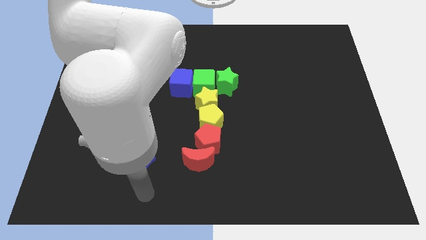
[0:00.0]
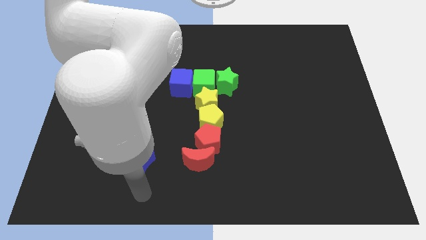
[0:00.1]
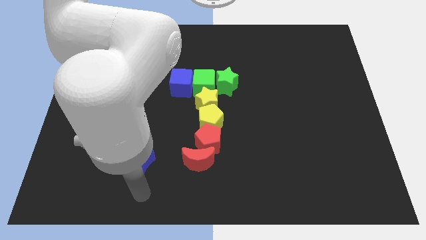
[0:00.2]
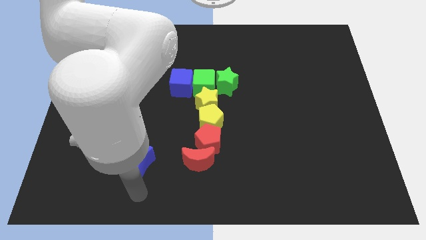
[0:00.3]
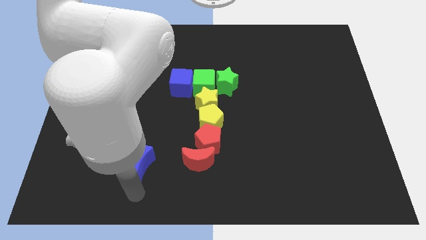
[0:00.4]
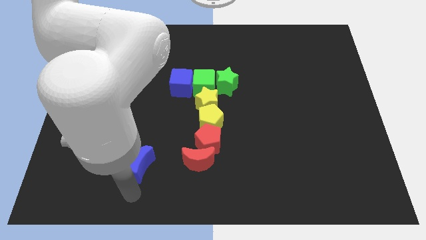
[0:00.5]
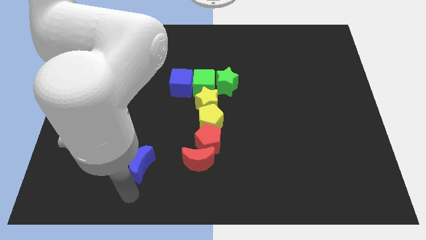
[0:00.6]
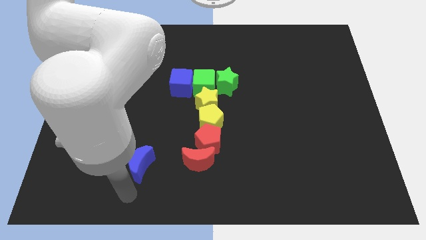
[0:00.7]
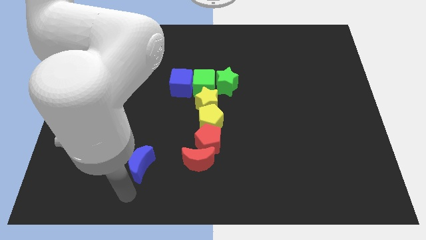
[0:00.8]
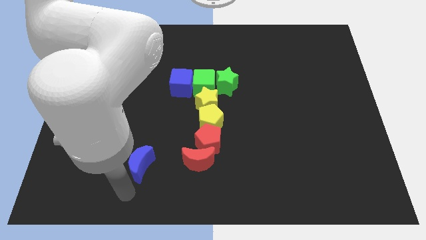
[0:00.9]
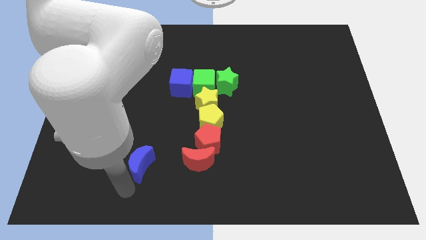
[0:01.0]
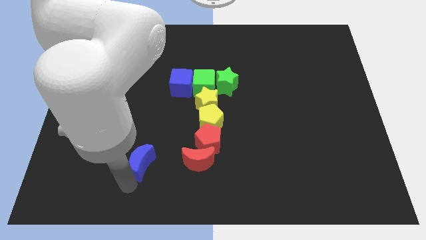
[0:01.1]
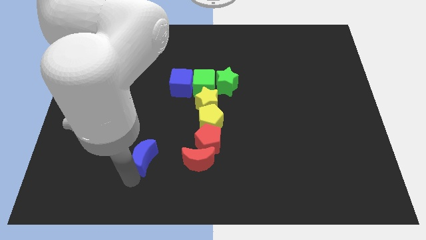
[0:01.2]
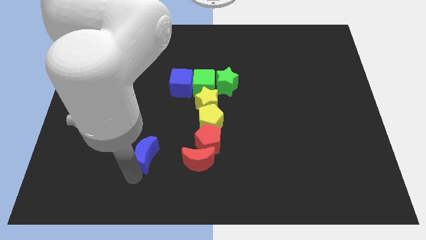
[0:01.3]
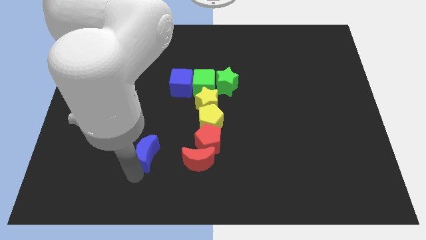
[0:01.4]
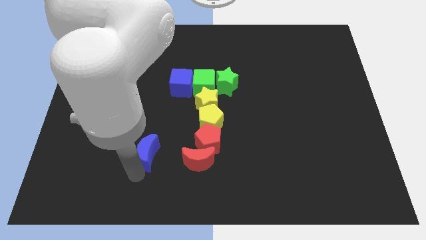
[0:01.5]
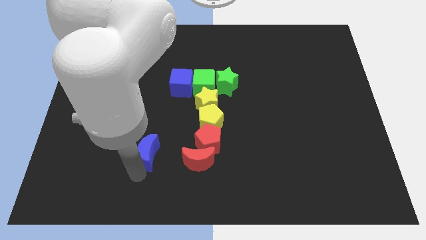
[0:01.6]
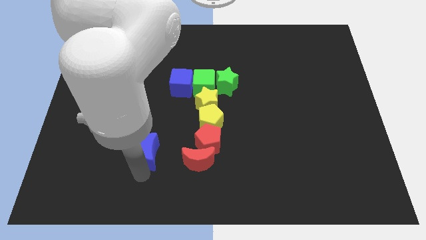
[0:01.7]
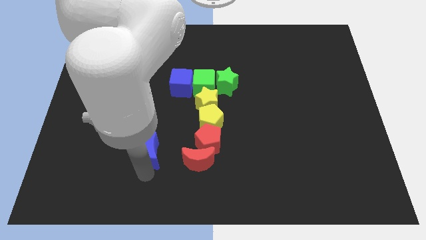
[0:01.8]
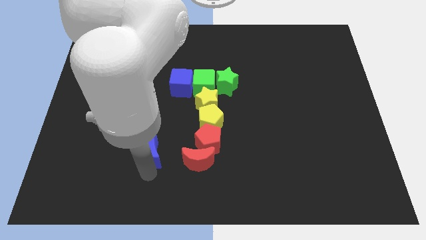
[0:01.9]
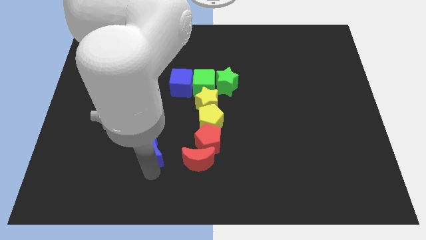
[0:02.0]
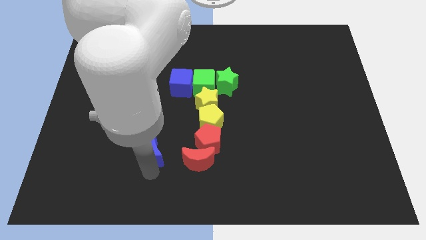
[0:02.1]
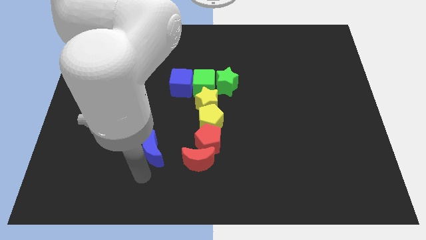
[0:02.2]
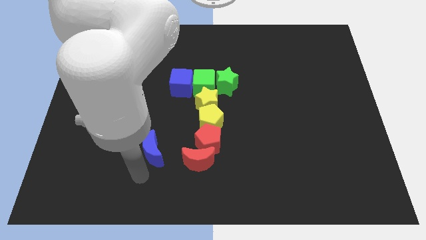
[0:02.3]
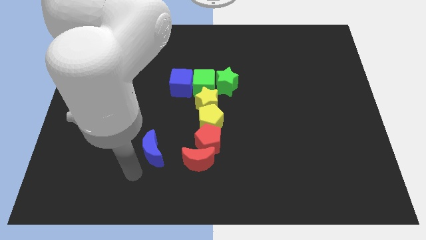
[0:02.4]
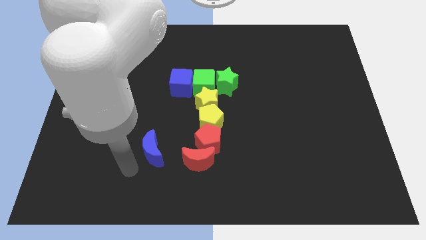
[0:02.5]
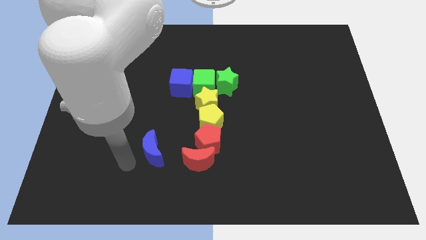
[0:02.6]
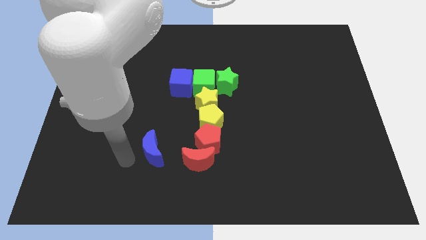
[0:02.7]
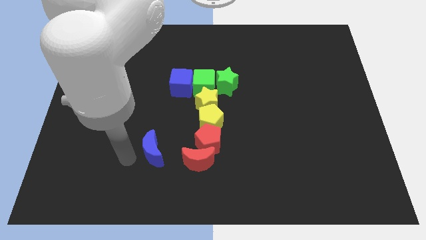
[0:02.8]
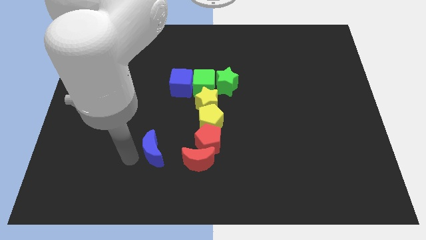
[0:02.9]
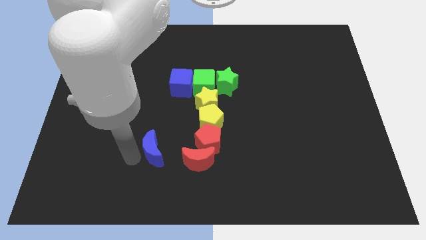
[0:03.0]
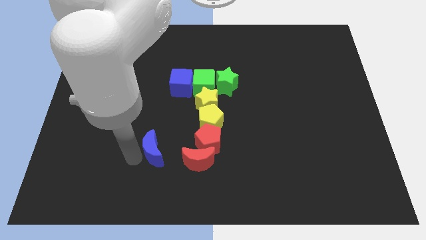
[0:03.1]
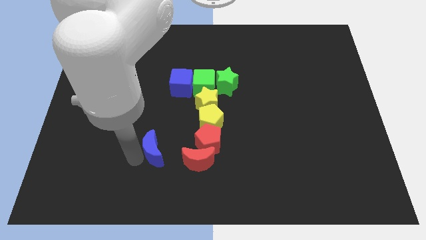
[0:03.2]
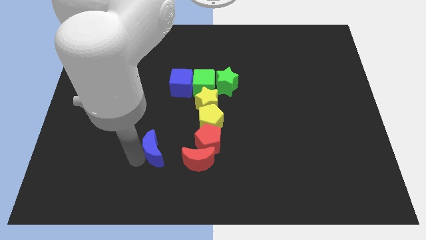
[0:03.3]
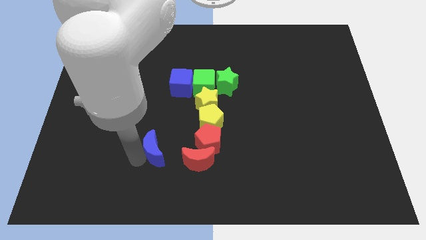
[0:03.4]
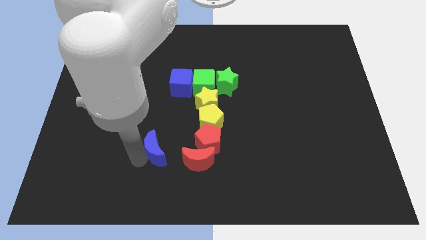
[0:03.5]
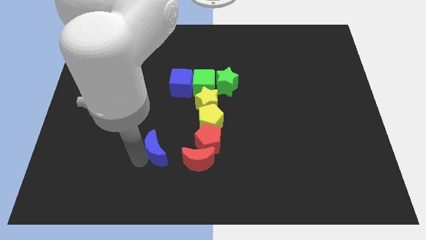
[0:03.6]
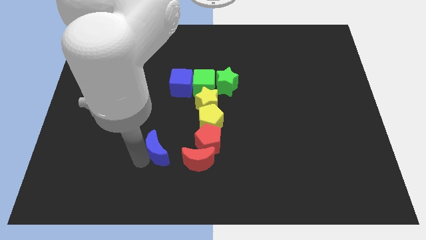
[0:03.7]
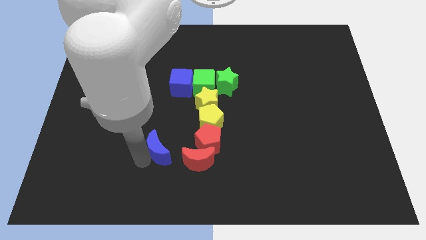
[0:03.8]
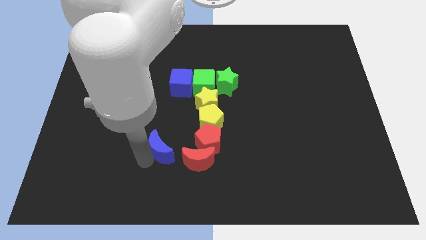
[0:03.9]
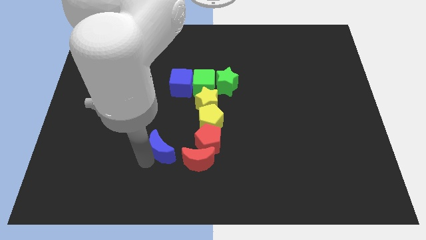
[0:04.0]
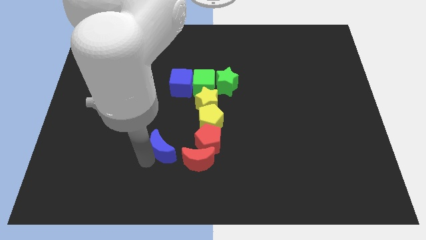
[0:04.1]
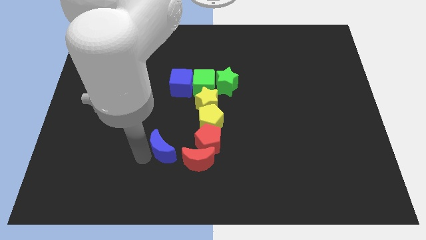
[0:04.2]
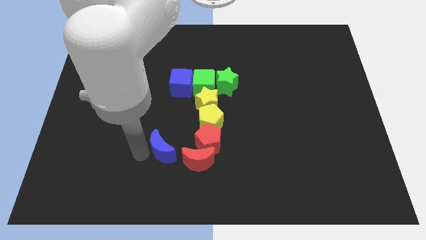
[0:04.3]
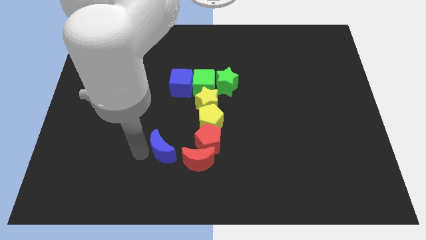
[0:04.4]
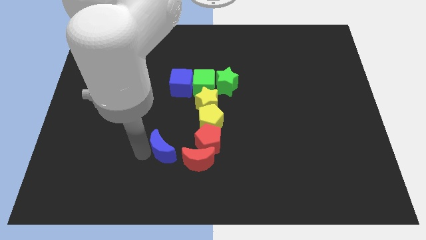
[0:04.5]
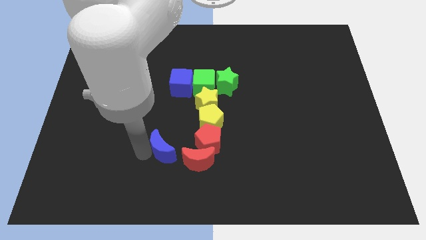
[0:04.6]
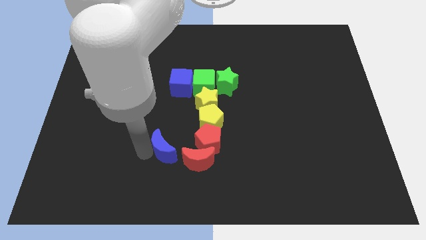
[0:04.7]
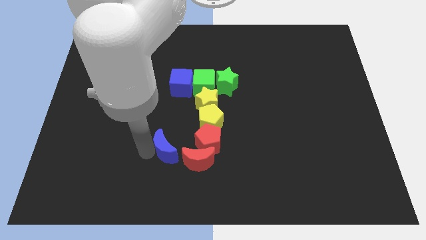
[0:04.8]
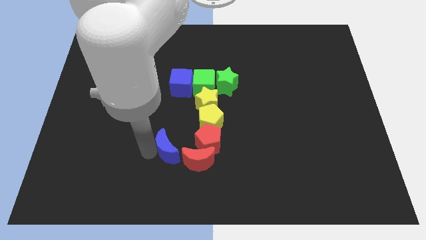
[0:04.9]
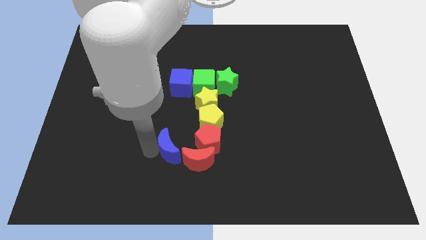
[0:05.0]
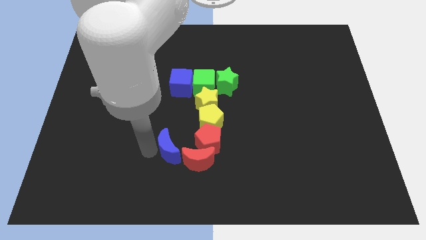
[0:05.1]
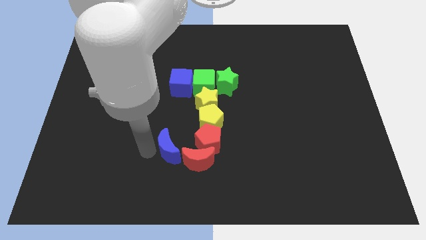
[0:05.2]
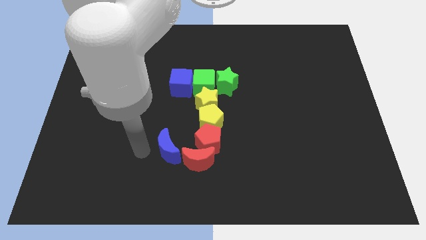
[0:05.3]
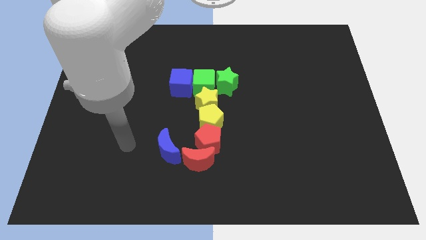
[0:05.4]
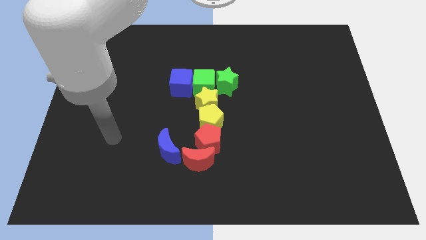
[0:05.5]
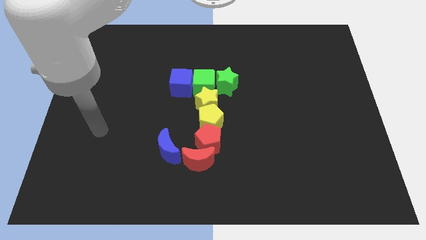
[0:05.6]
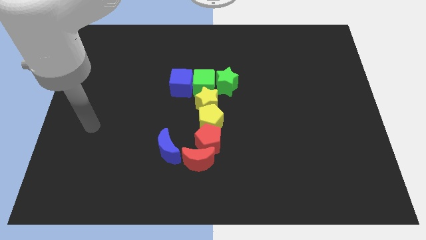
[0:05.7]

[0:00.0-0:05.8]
move blue moon near red moon

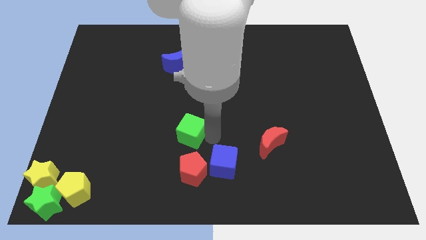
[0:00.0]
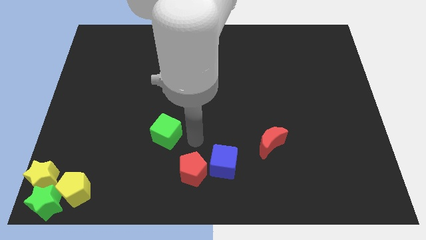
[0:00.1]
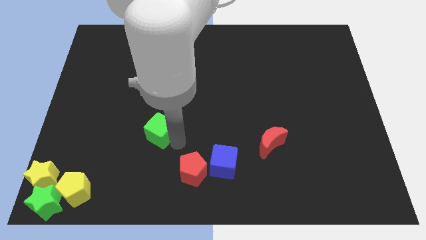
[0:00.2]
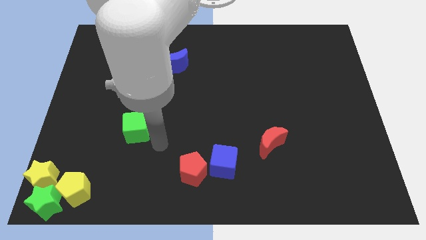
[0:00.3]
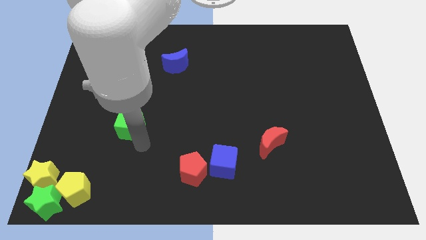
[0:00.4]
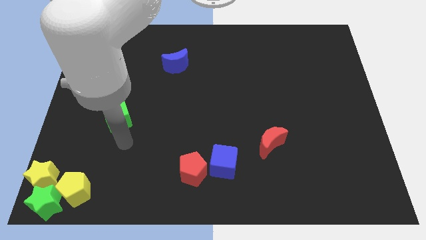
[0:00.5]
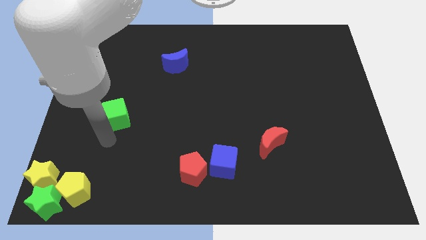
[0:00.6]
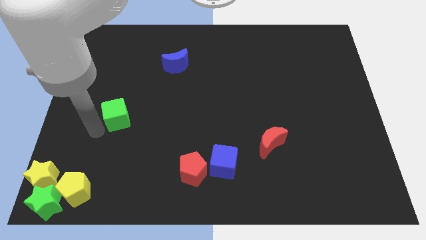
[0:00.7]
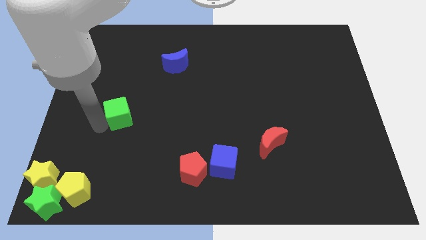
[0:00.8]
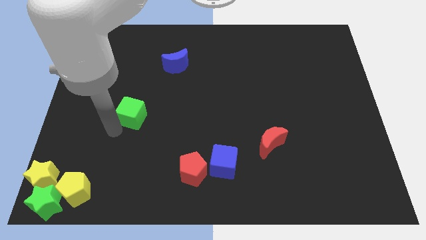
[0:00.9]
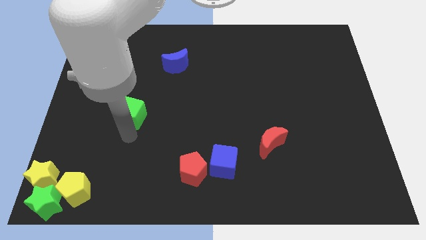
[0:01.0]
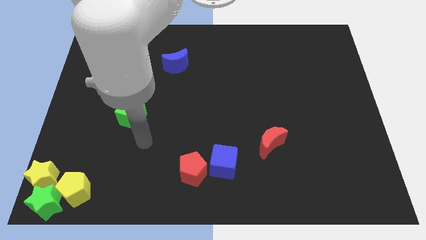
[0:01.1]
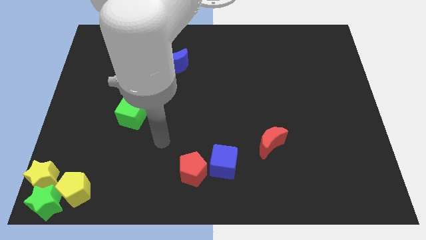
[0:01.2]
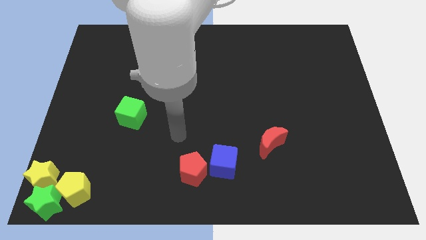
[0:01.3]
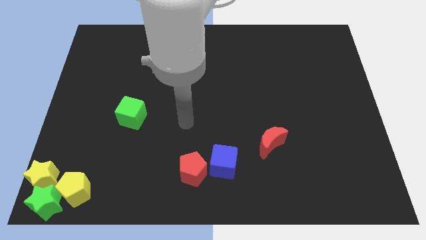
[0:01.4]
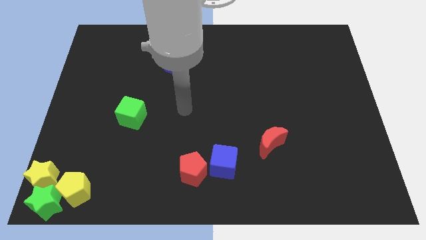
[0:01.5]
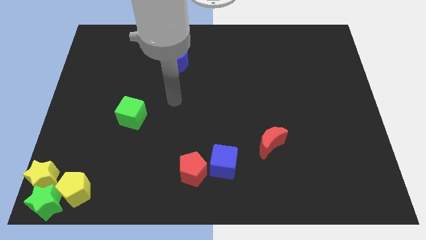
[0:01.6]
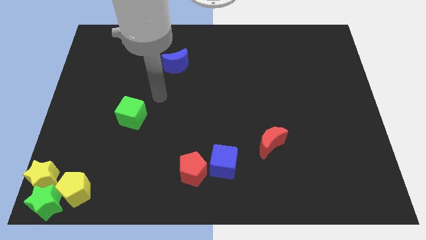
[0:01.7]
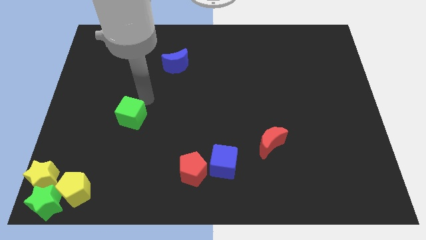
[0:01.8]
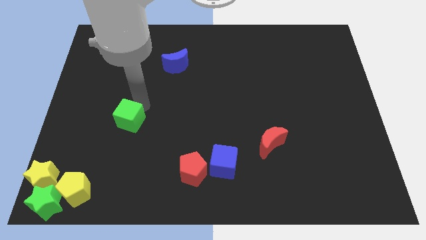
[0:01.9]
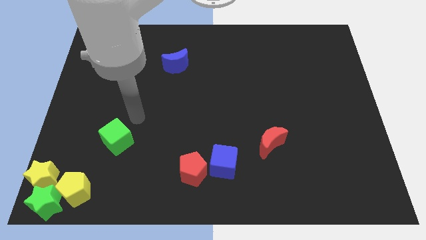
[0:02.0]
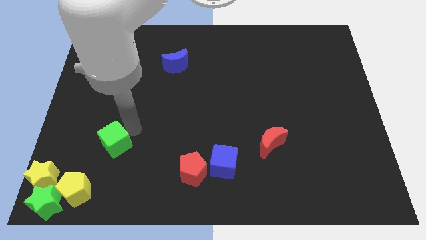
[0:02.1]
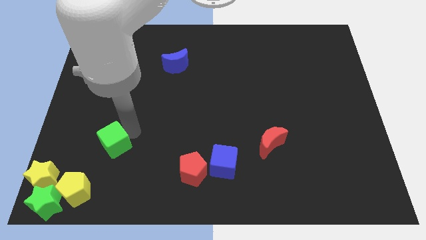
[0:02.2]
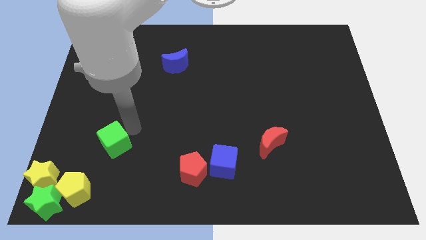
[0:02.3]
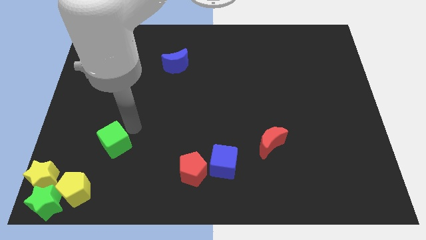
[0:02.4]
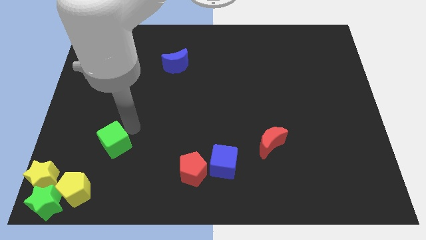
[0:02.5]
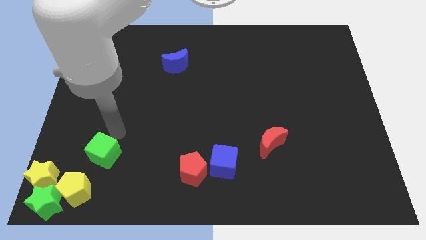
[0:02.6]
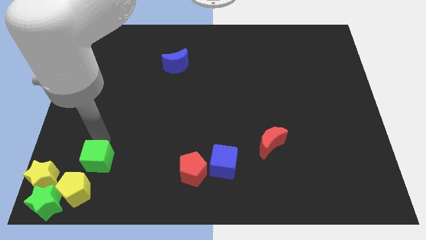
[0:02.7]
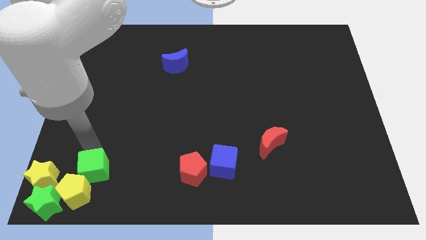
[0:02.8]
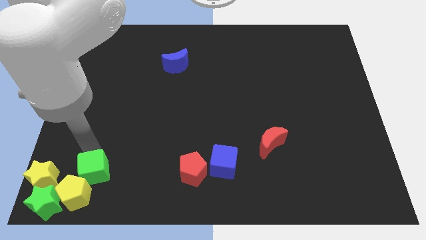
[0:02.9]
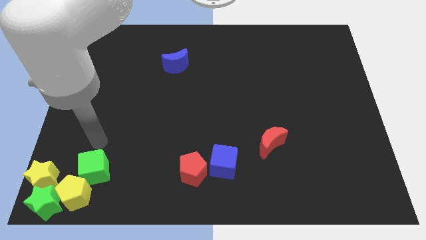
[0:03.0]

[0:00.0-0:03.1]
move green cube into the yellow pentagon

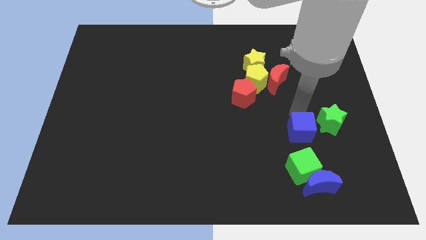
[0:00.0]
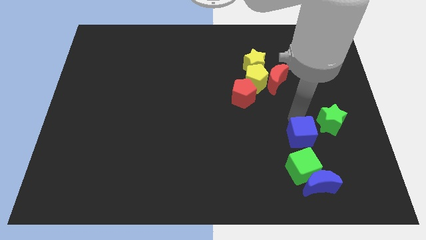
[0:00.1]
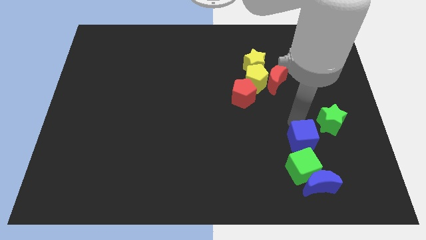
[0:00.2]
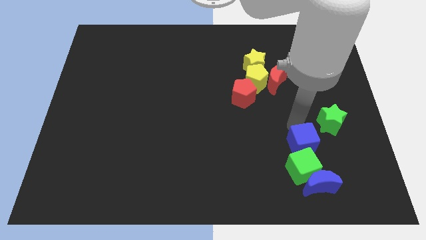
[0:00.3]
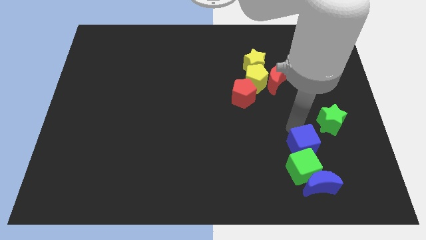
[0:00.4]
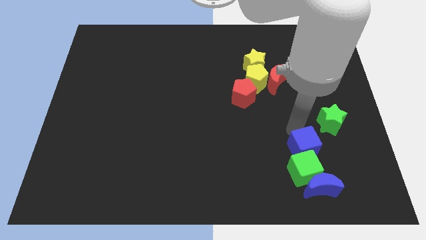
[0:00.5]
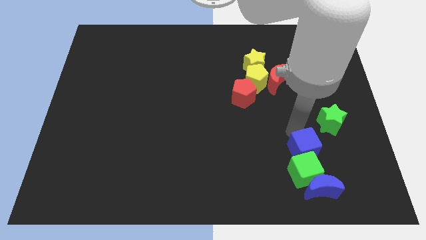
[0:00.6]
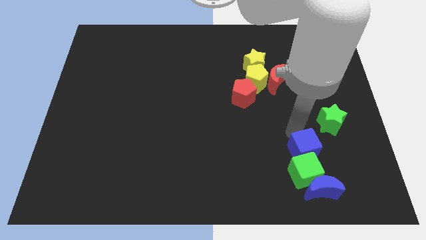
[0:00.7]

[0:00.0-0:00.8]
move the blue cube above the green cube
